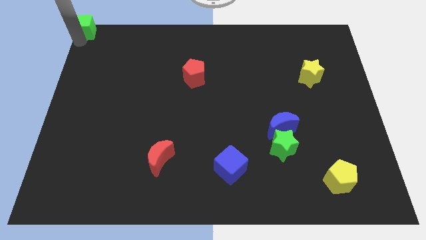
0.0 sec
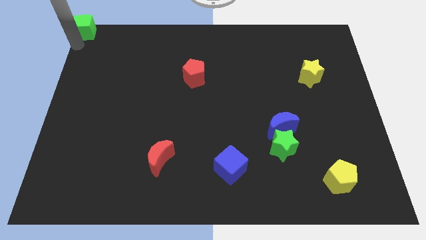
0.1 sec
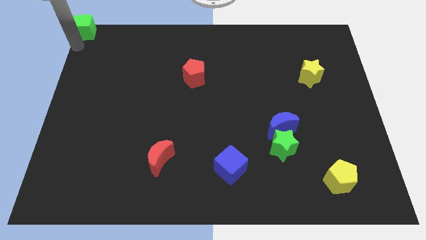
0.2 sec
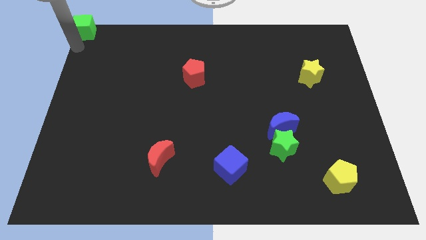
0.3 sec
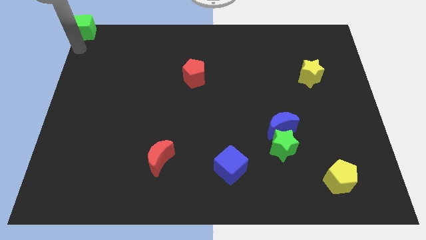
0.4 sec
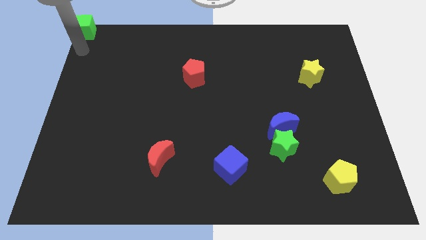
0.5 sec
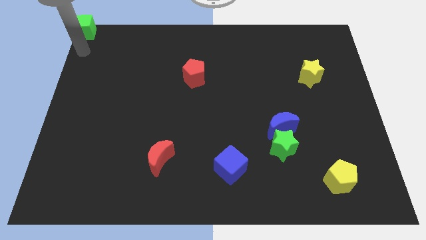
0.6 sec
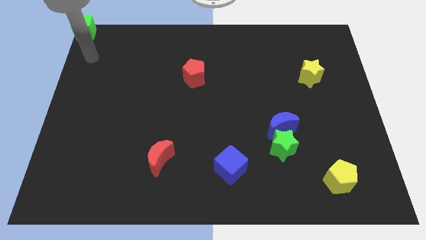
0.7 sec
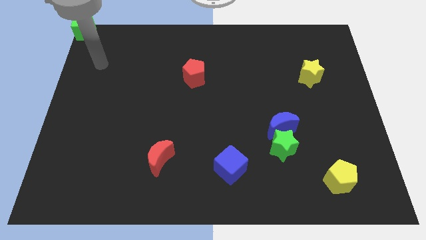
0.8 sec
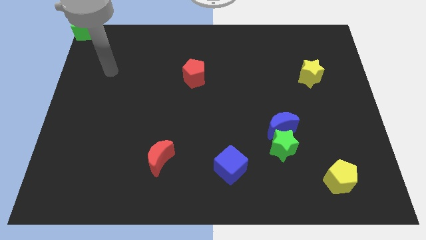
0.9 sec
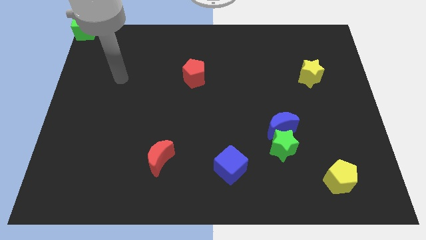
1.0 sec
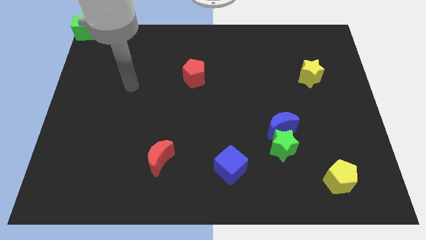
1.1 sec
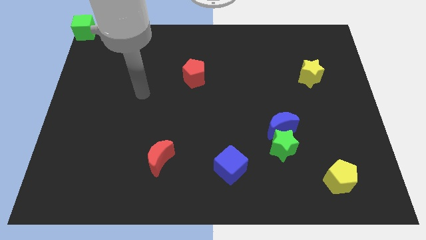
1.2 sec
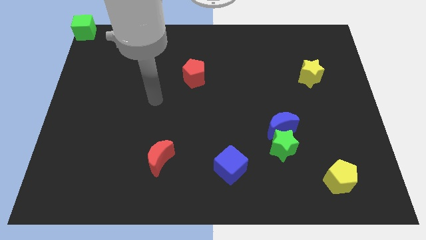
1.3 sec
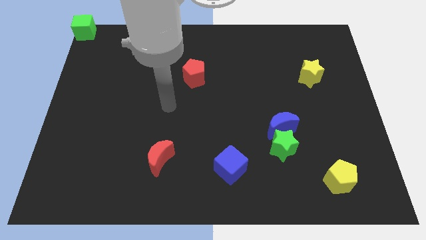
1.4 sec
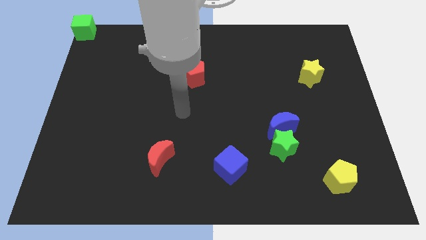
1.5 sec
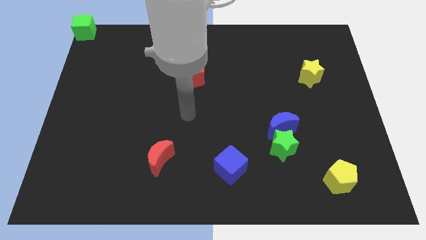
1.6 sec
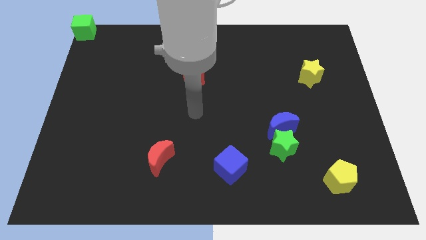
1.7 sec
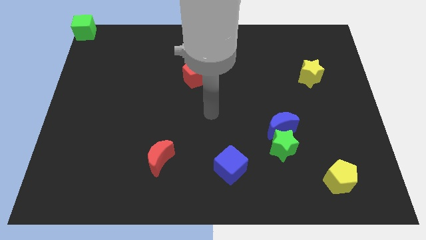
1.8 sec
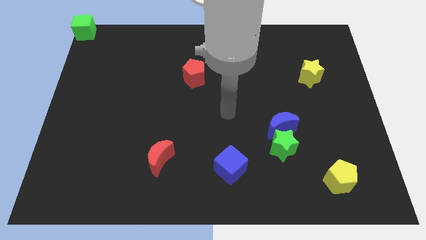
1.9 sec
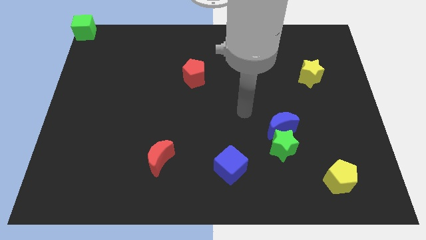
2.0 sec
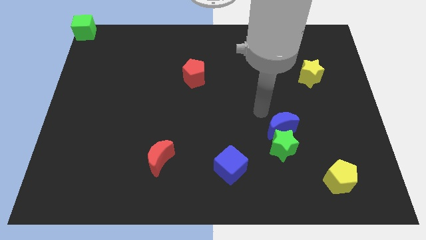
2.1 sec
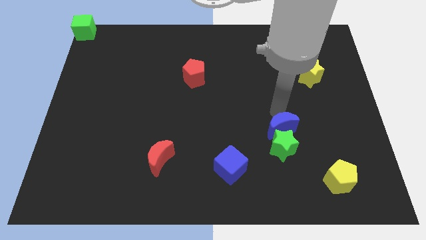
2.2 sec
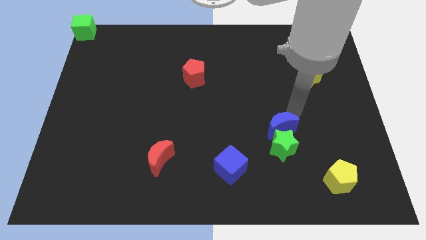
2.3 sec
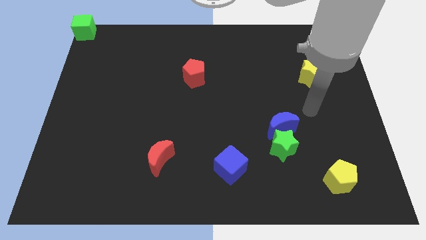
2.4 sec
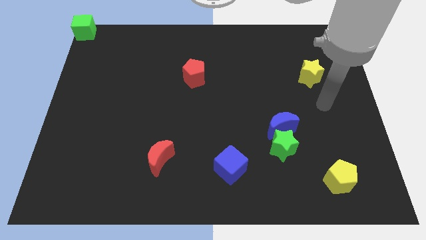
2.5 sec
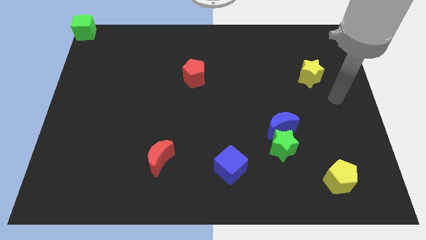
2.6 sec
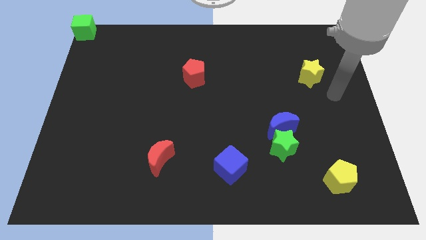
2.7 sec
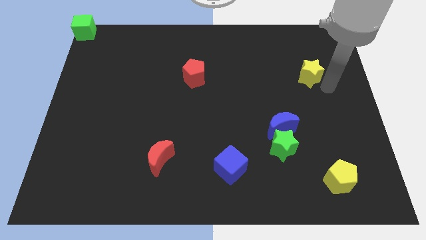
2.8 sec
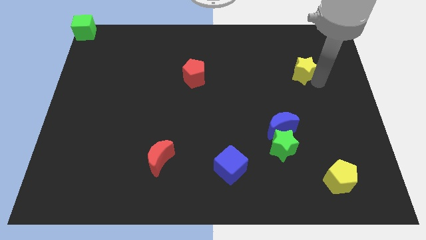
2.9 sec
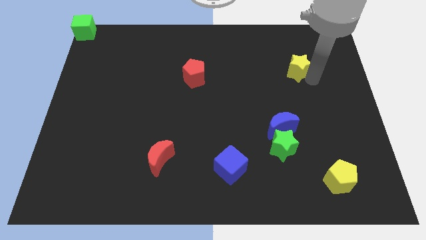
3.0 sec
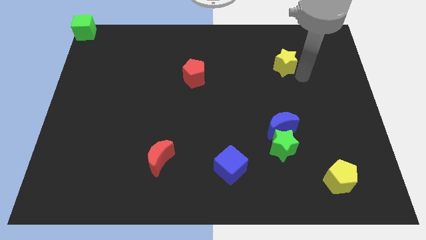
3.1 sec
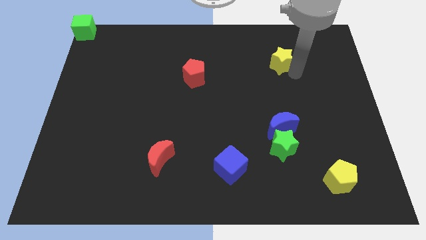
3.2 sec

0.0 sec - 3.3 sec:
touch the bottom of yellow star

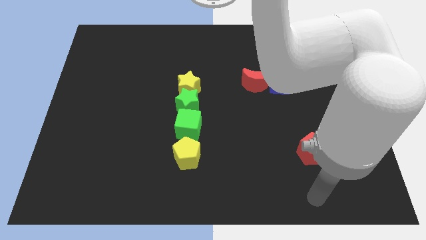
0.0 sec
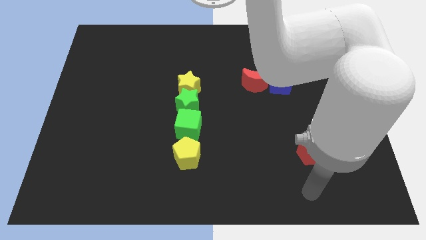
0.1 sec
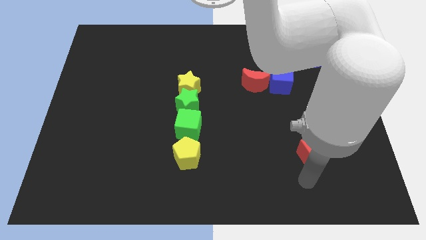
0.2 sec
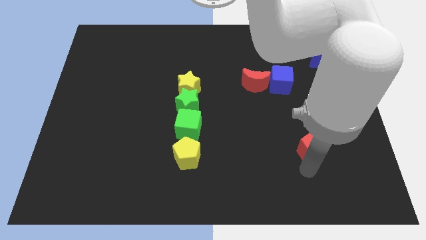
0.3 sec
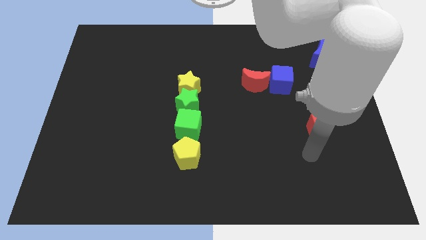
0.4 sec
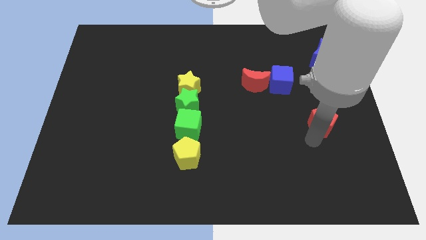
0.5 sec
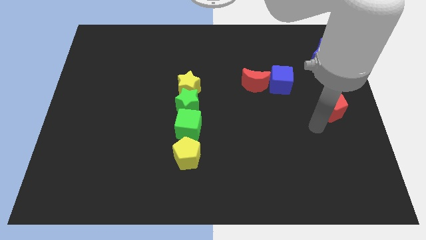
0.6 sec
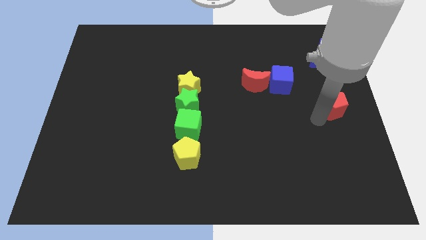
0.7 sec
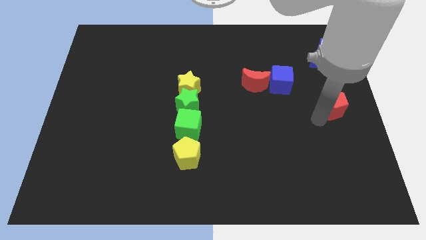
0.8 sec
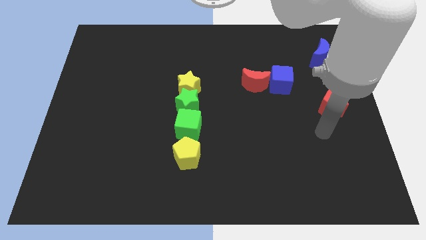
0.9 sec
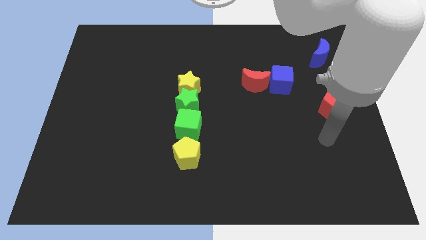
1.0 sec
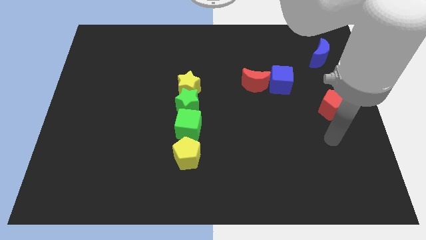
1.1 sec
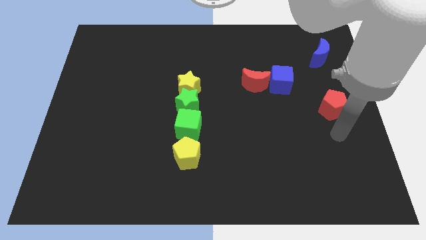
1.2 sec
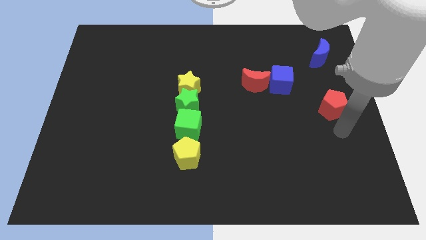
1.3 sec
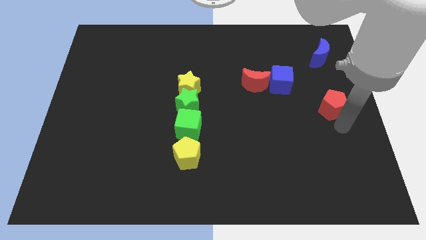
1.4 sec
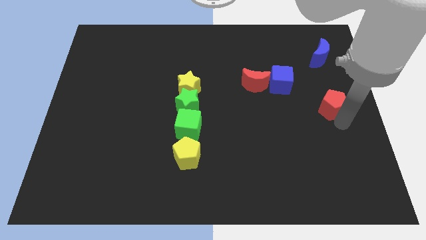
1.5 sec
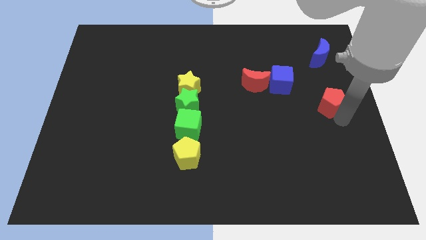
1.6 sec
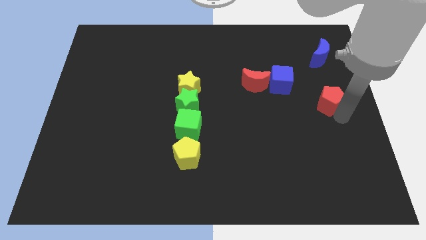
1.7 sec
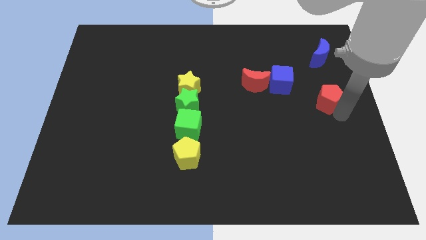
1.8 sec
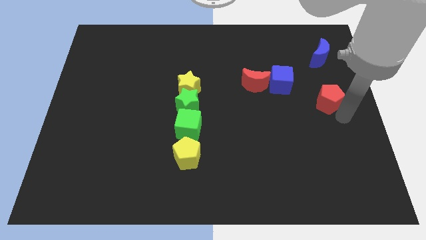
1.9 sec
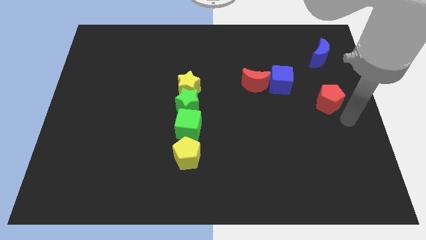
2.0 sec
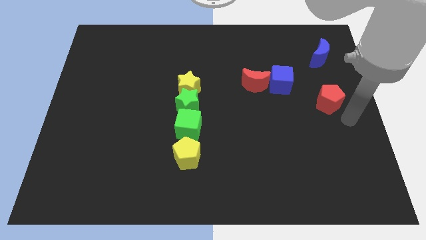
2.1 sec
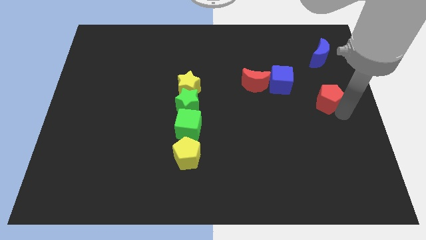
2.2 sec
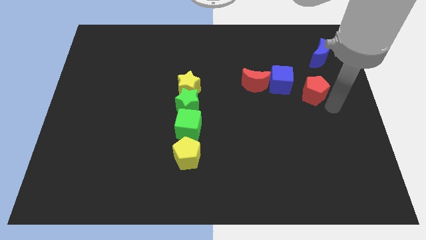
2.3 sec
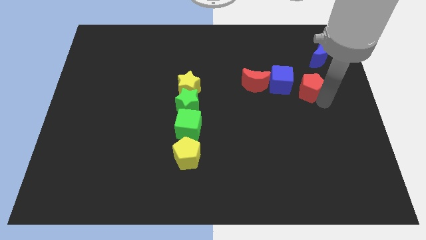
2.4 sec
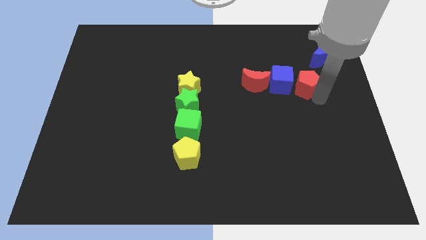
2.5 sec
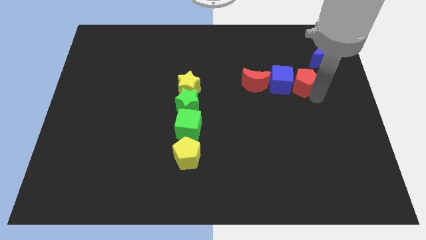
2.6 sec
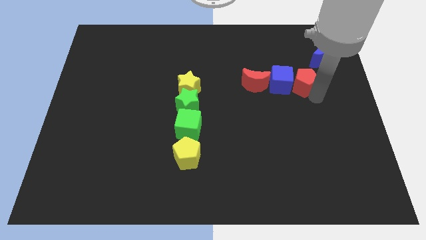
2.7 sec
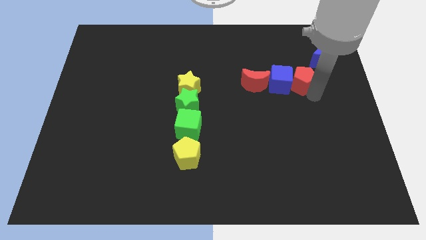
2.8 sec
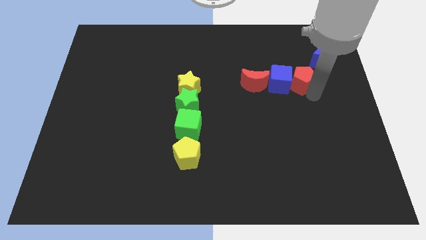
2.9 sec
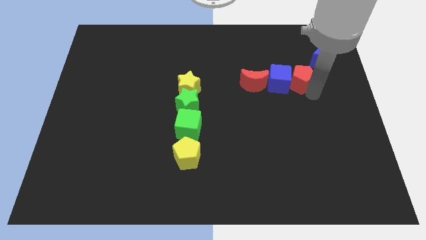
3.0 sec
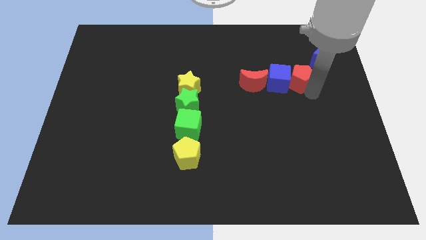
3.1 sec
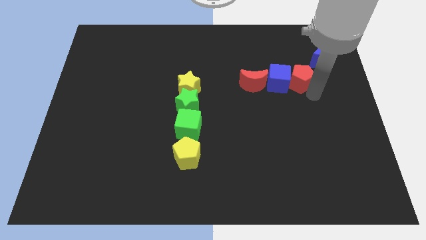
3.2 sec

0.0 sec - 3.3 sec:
push the red pentagon into the right side of the blue cube

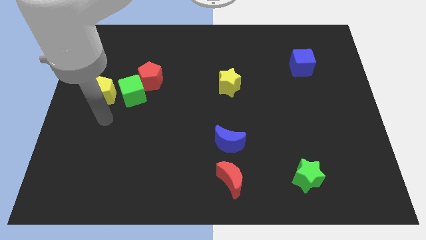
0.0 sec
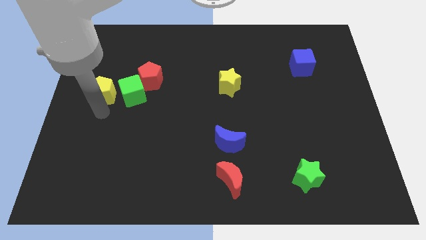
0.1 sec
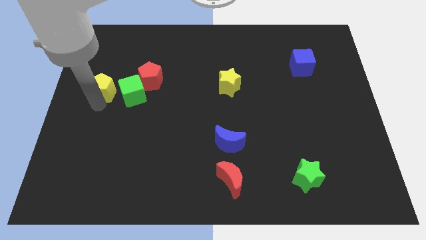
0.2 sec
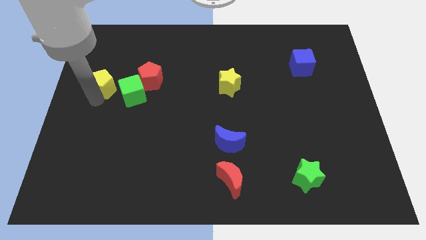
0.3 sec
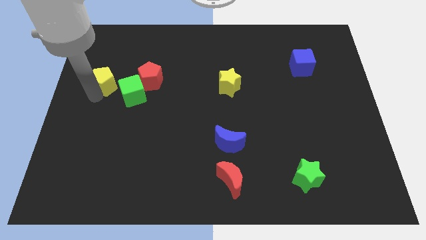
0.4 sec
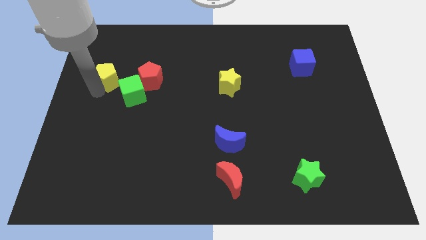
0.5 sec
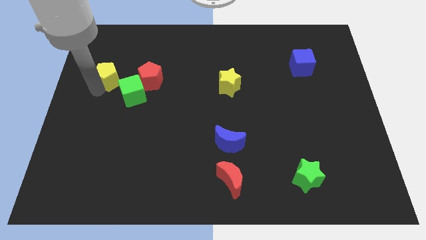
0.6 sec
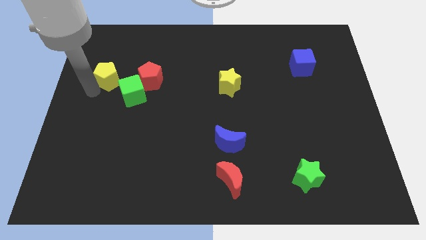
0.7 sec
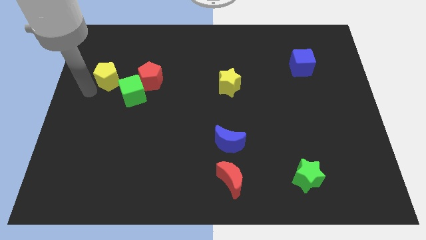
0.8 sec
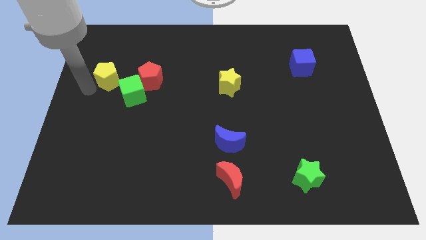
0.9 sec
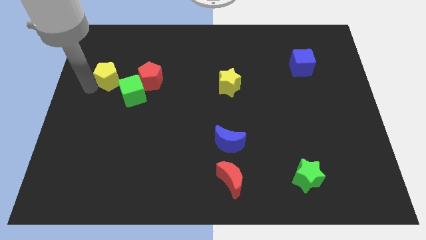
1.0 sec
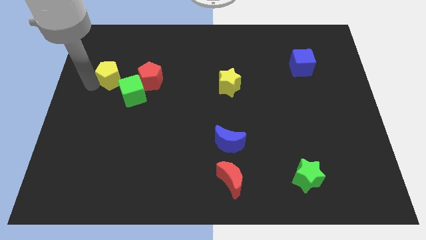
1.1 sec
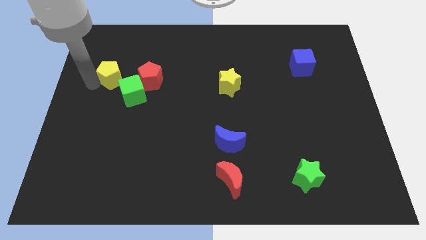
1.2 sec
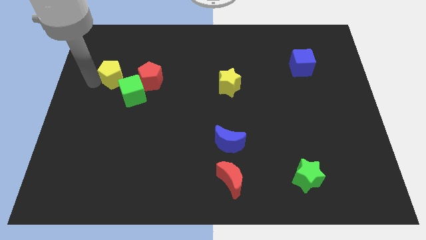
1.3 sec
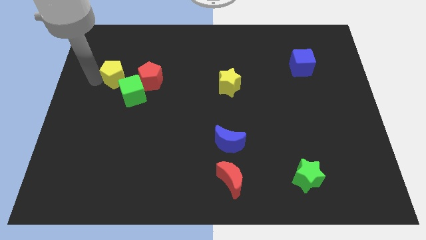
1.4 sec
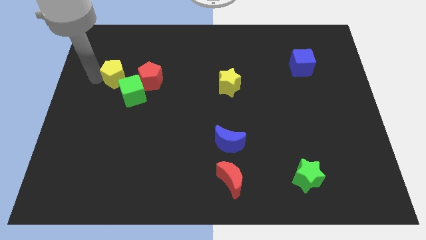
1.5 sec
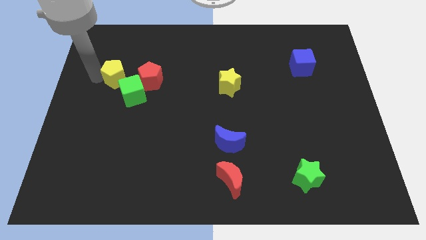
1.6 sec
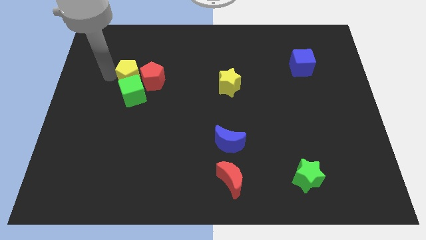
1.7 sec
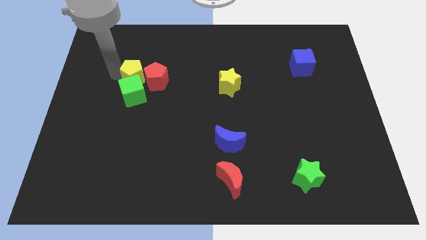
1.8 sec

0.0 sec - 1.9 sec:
slide the yellow pentagon vertically above the green cube

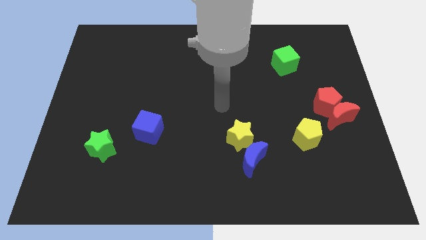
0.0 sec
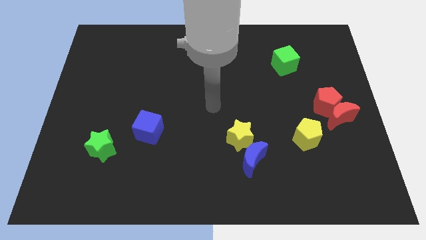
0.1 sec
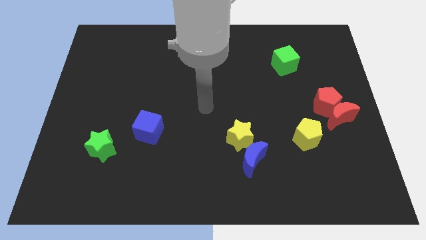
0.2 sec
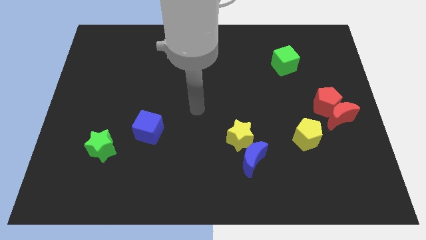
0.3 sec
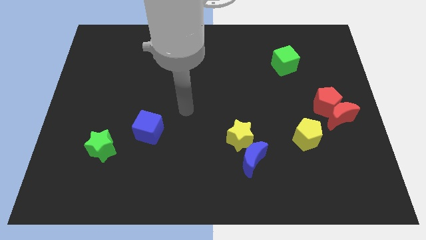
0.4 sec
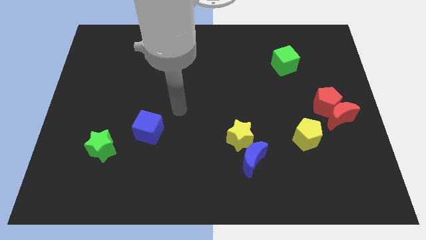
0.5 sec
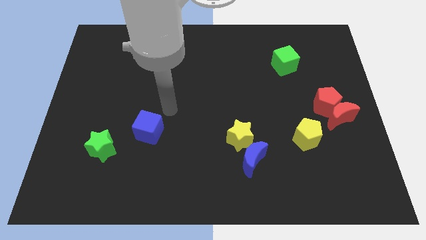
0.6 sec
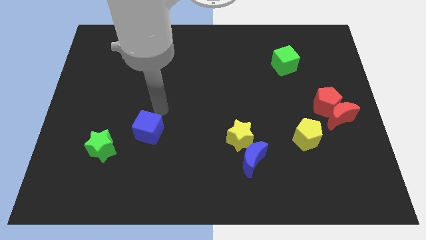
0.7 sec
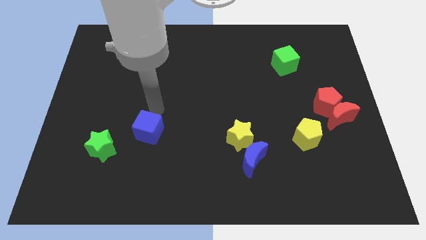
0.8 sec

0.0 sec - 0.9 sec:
move your arm near blue cube
